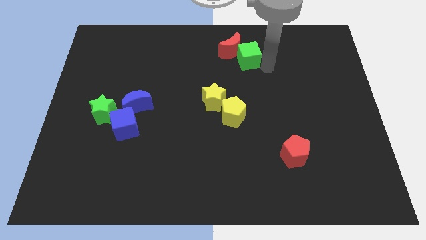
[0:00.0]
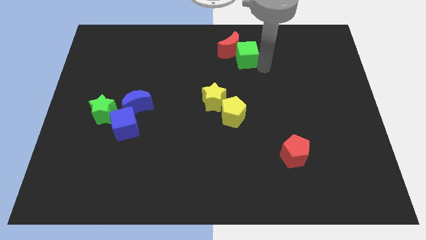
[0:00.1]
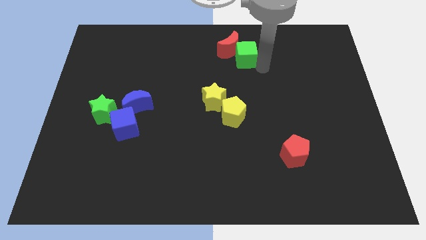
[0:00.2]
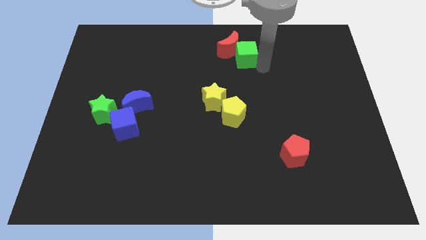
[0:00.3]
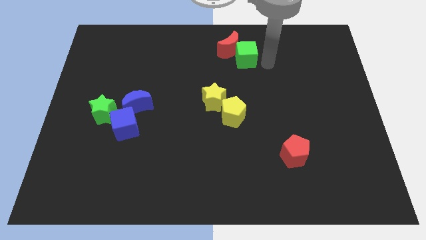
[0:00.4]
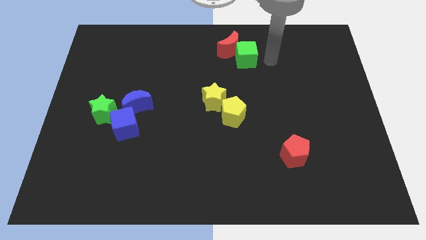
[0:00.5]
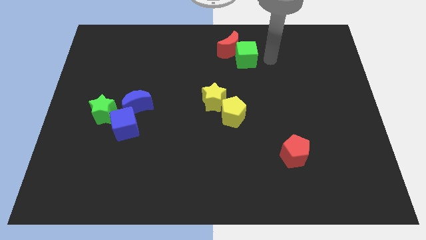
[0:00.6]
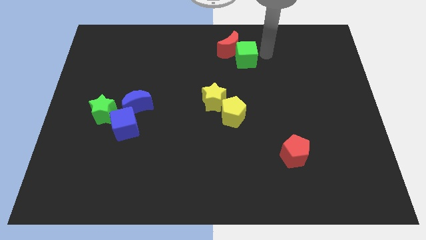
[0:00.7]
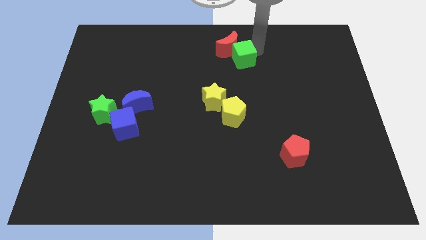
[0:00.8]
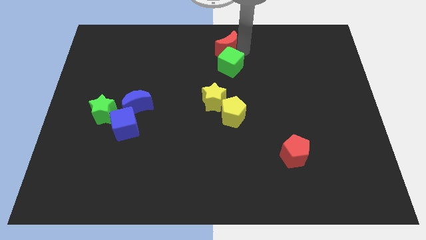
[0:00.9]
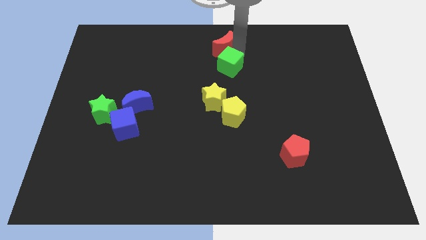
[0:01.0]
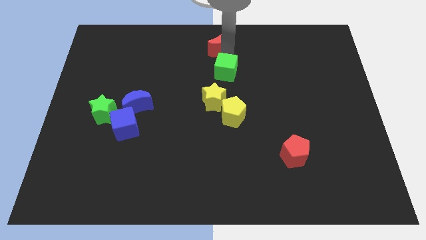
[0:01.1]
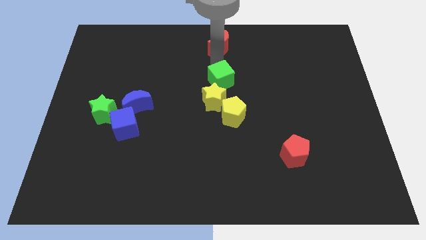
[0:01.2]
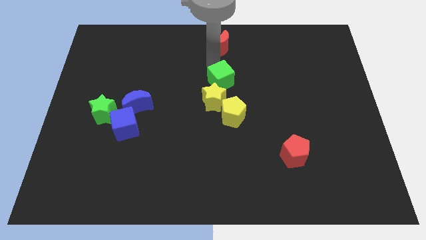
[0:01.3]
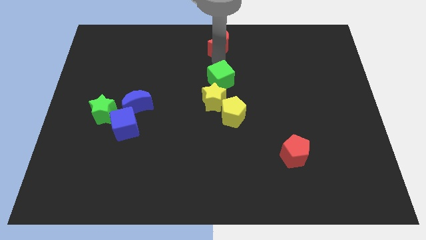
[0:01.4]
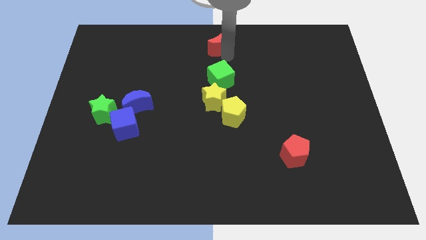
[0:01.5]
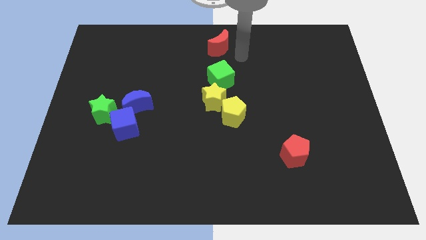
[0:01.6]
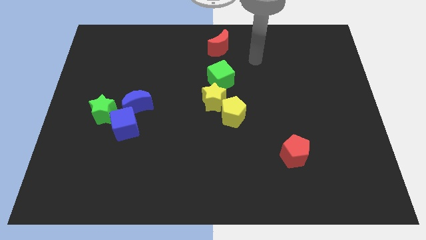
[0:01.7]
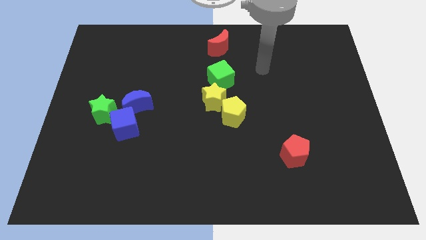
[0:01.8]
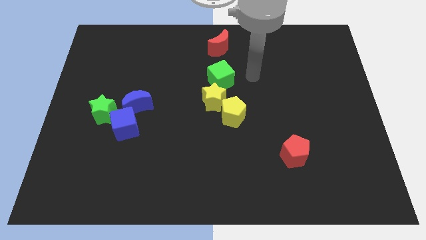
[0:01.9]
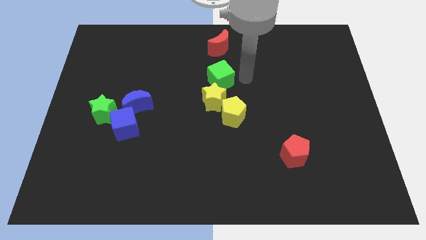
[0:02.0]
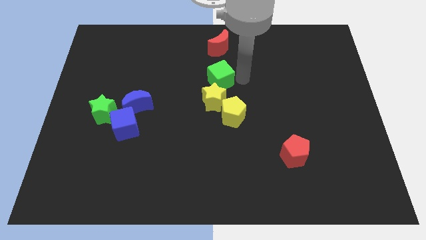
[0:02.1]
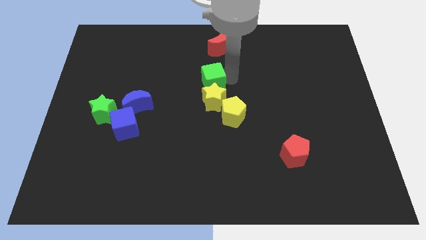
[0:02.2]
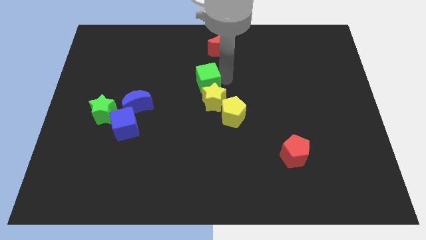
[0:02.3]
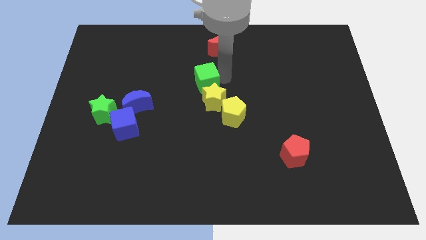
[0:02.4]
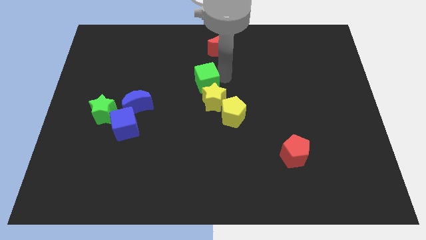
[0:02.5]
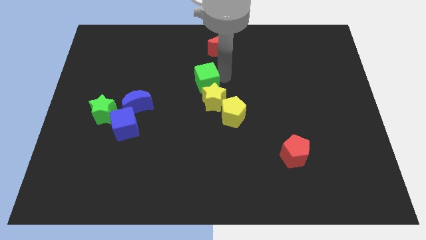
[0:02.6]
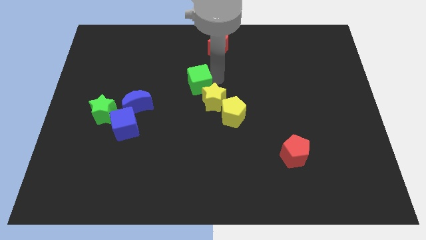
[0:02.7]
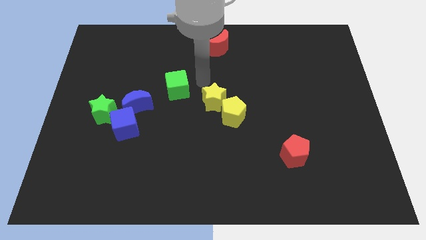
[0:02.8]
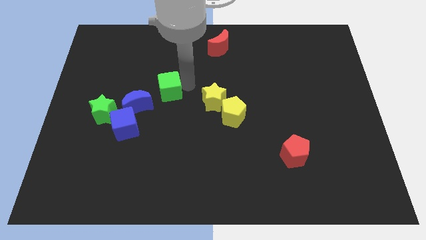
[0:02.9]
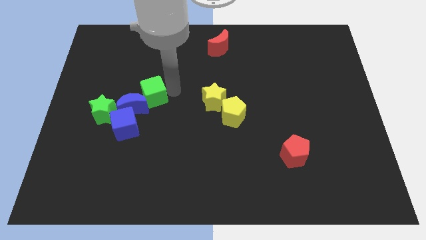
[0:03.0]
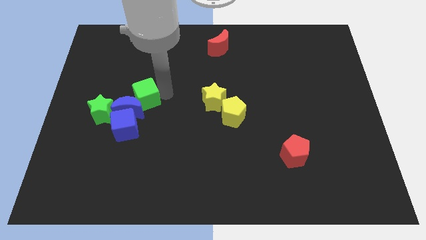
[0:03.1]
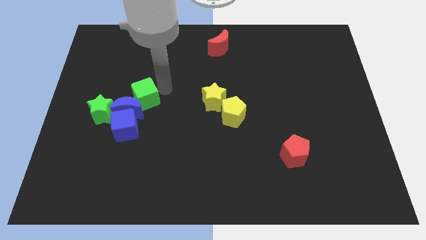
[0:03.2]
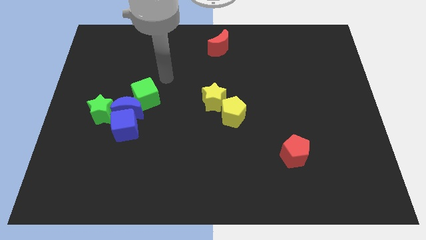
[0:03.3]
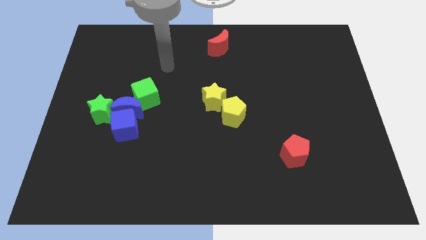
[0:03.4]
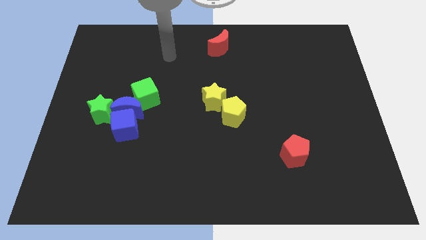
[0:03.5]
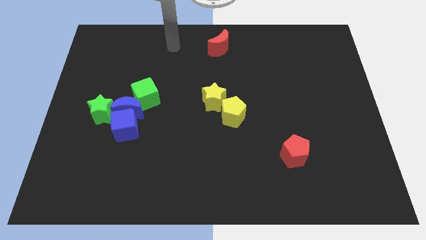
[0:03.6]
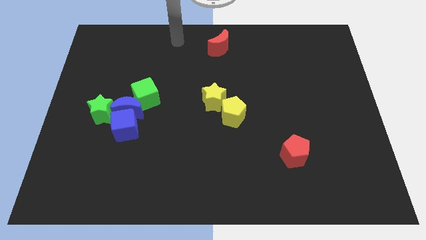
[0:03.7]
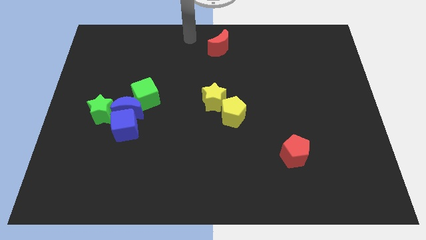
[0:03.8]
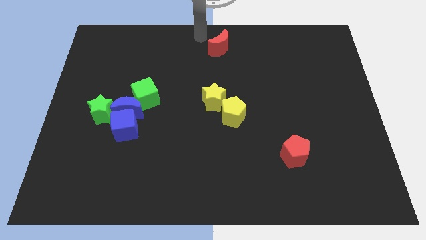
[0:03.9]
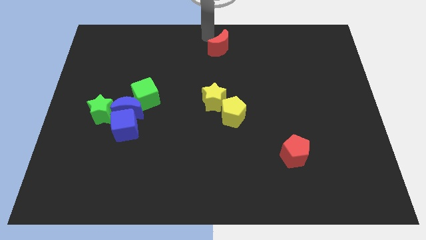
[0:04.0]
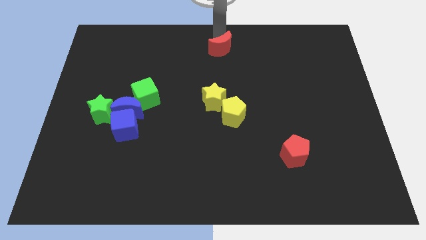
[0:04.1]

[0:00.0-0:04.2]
separate the red moon and the green cube

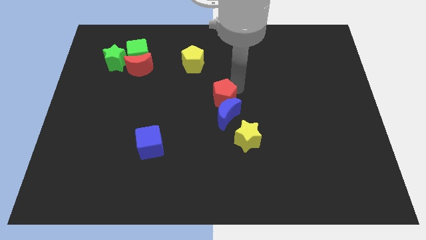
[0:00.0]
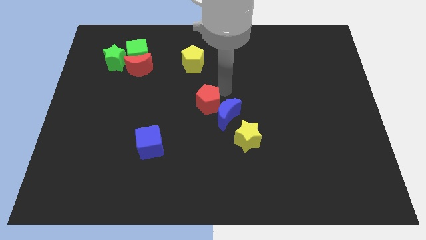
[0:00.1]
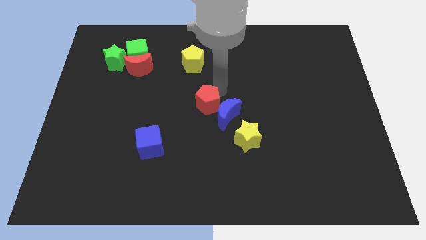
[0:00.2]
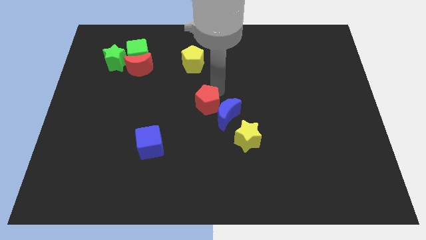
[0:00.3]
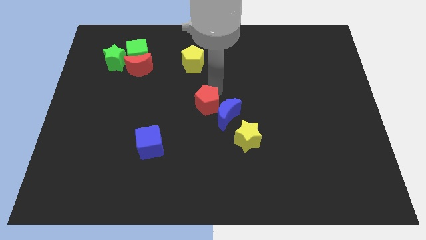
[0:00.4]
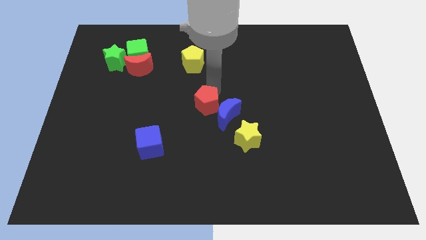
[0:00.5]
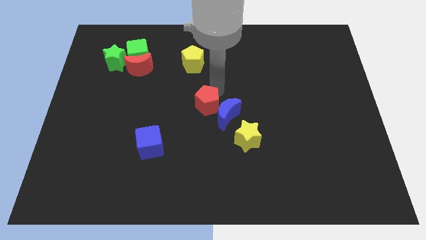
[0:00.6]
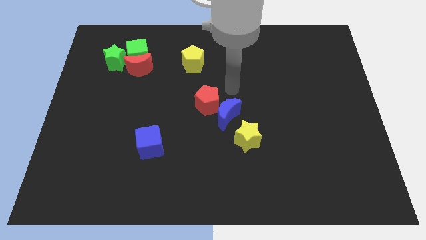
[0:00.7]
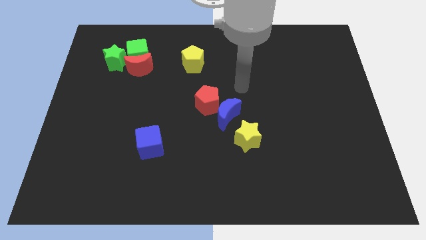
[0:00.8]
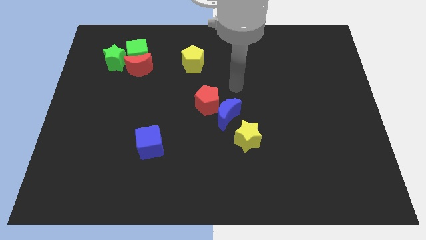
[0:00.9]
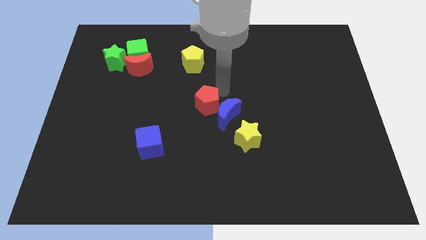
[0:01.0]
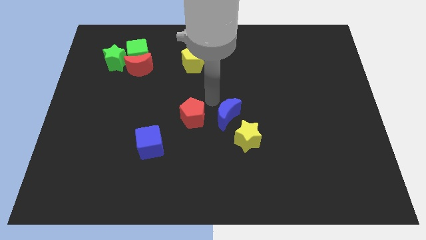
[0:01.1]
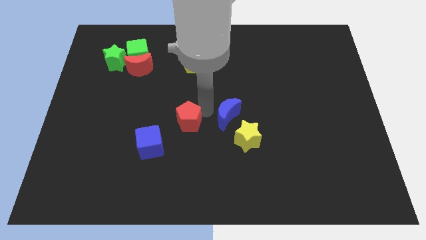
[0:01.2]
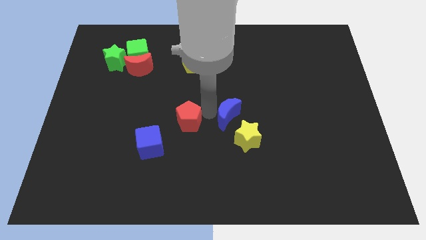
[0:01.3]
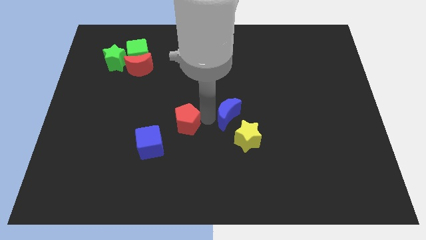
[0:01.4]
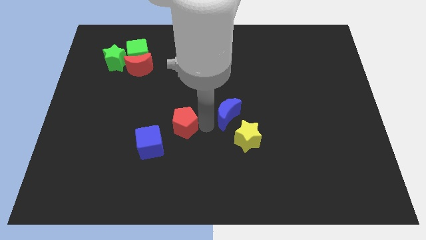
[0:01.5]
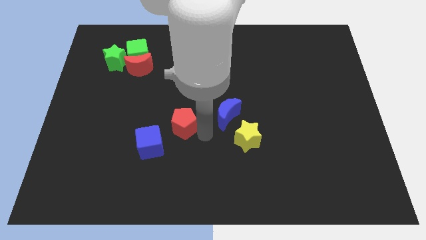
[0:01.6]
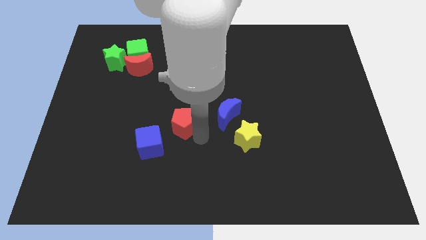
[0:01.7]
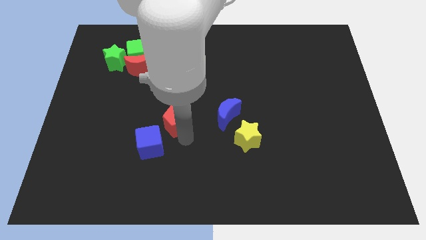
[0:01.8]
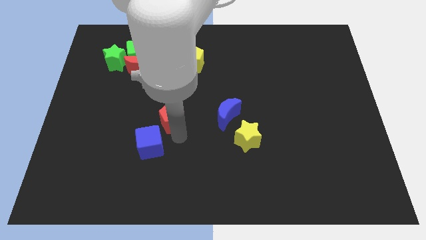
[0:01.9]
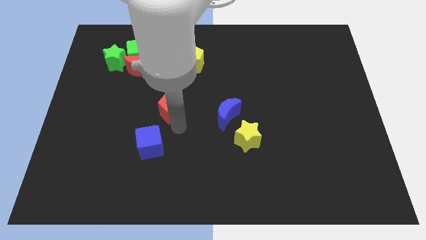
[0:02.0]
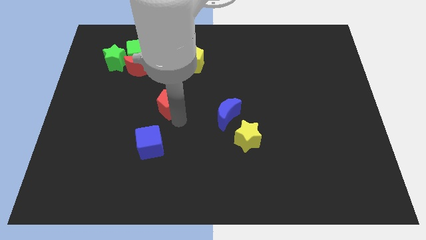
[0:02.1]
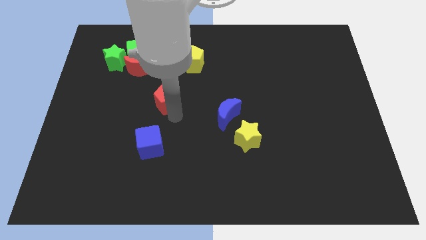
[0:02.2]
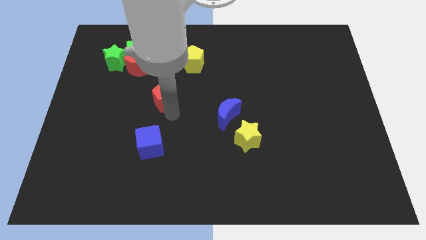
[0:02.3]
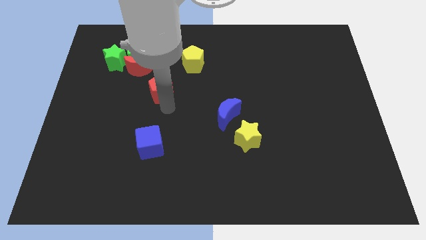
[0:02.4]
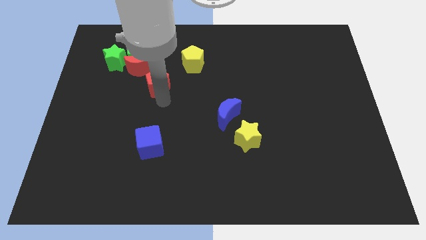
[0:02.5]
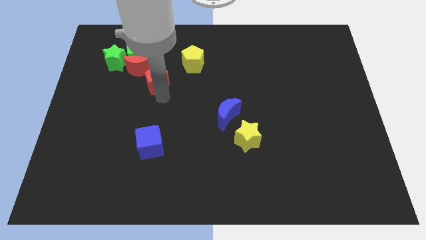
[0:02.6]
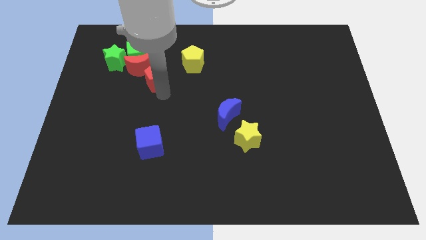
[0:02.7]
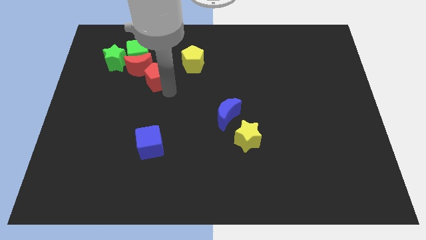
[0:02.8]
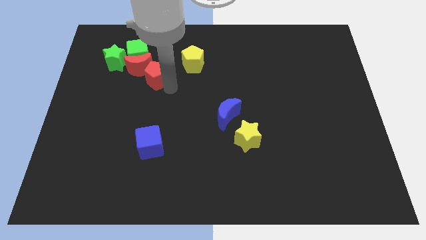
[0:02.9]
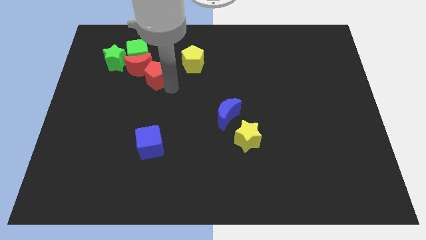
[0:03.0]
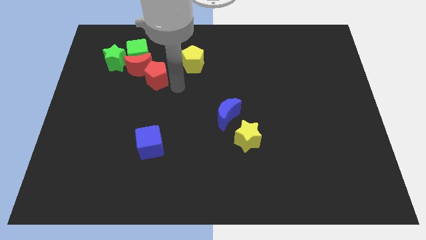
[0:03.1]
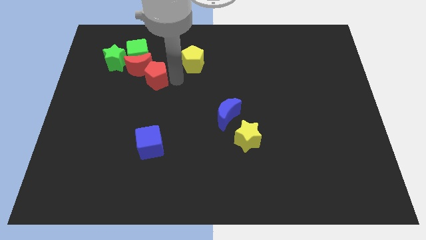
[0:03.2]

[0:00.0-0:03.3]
push the red pentagon close to the red crescent

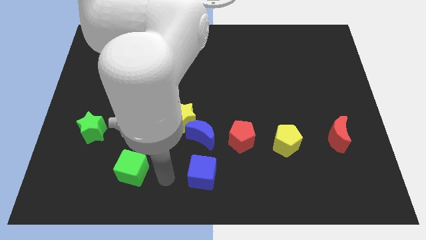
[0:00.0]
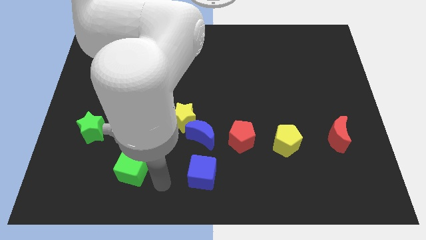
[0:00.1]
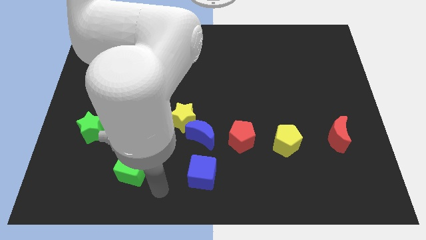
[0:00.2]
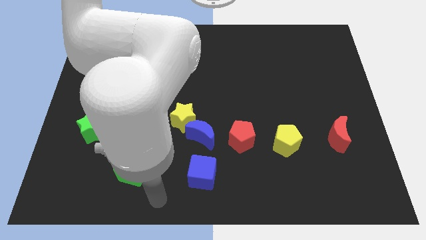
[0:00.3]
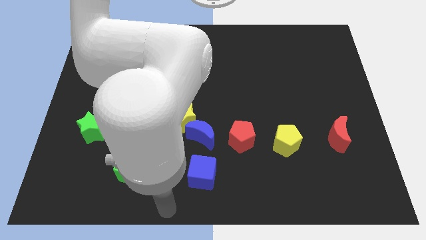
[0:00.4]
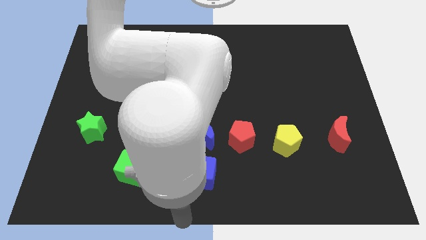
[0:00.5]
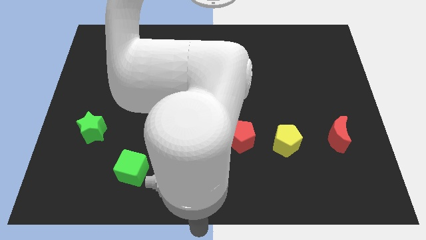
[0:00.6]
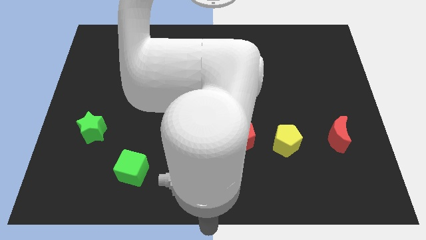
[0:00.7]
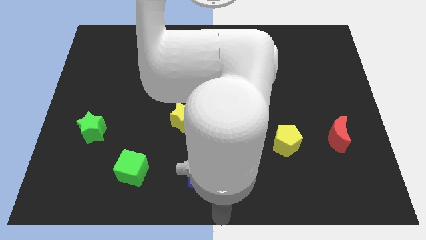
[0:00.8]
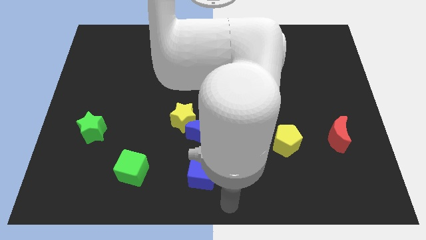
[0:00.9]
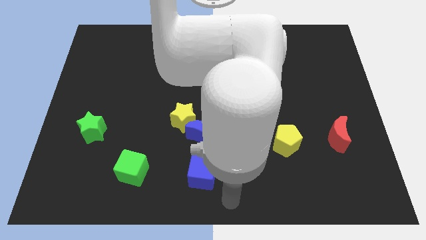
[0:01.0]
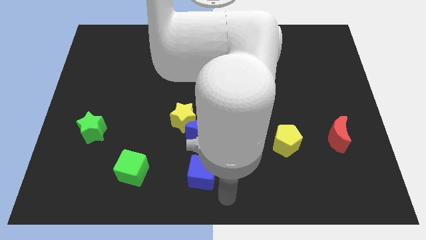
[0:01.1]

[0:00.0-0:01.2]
place arm in the bottom center

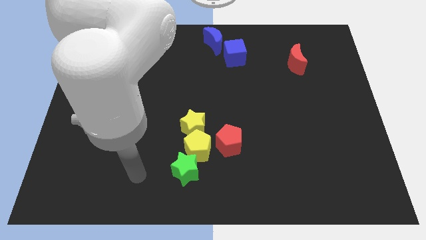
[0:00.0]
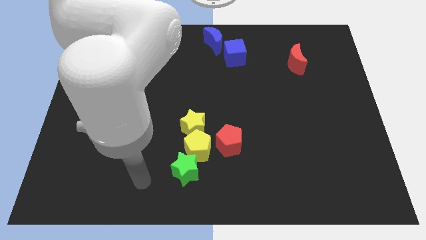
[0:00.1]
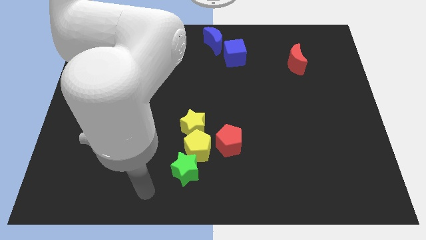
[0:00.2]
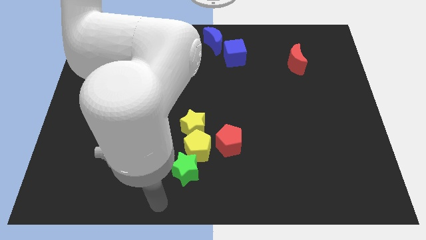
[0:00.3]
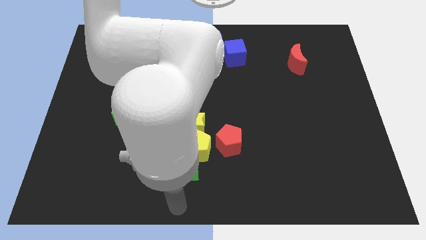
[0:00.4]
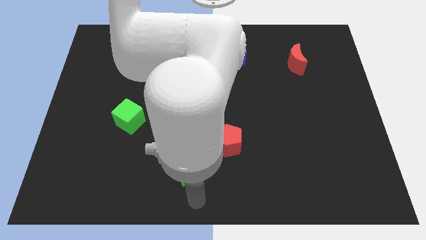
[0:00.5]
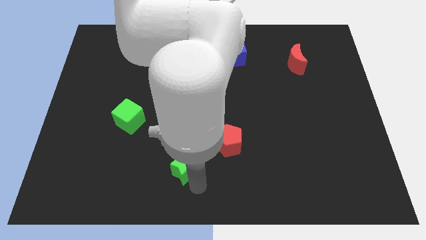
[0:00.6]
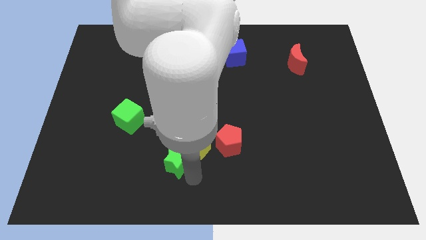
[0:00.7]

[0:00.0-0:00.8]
tap the bottom side of the green star
